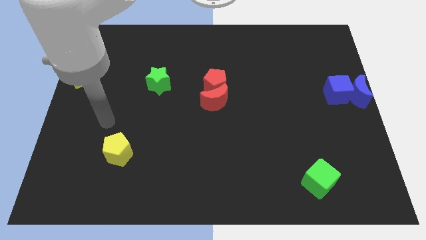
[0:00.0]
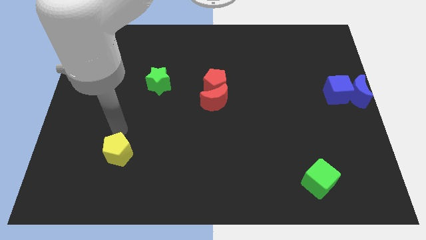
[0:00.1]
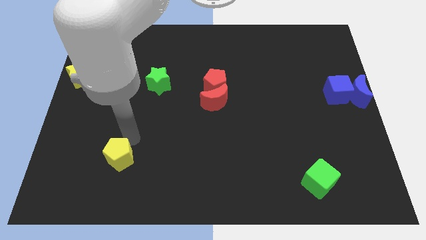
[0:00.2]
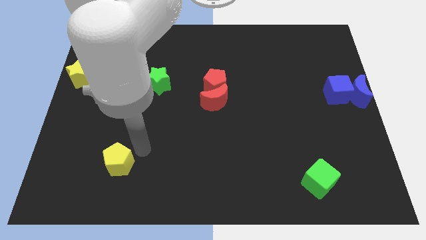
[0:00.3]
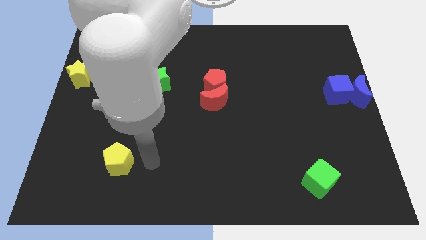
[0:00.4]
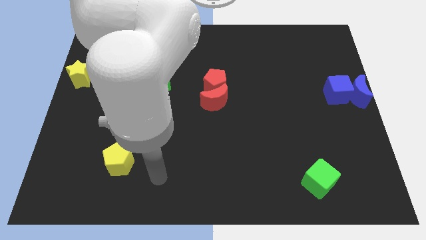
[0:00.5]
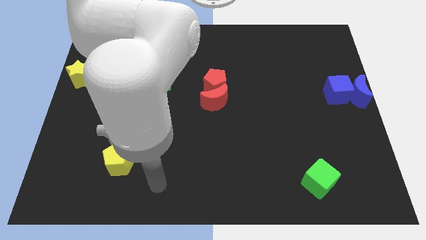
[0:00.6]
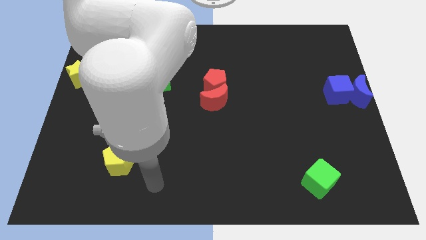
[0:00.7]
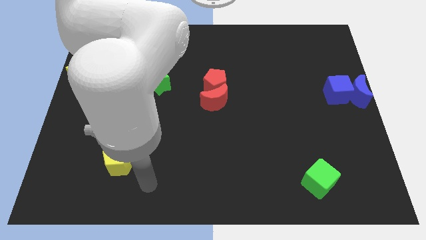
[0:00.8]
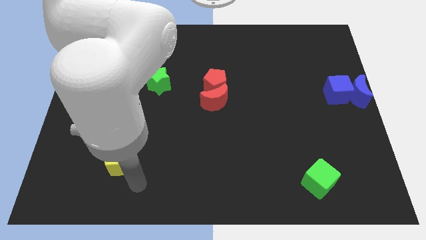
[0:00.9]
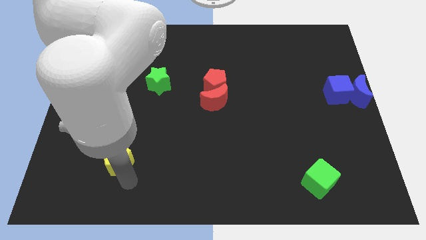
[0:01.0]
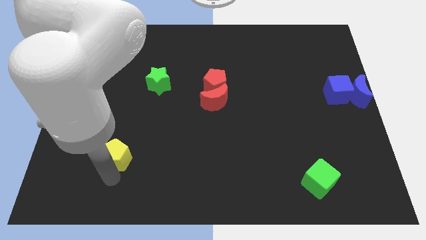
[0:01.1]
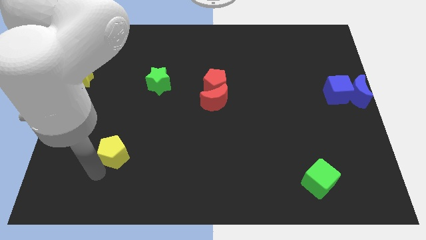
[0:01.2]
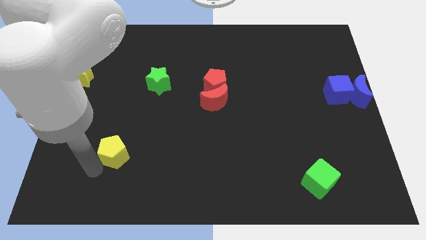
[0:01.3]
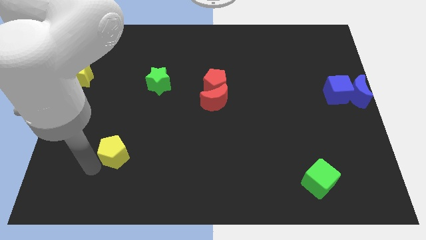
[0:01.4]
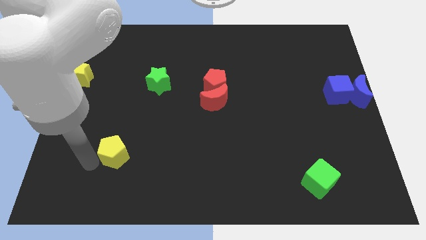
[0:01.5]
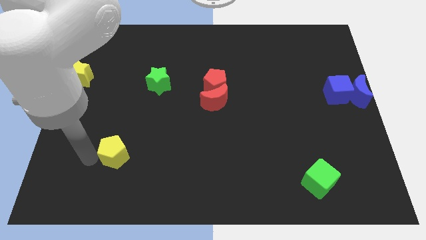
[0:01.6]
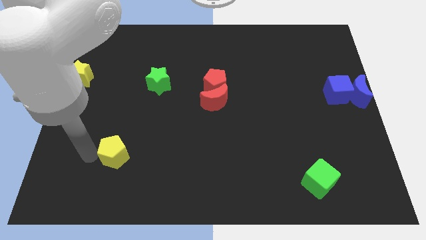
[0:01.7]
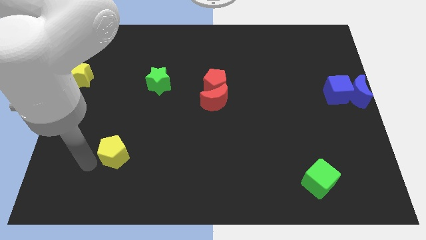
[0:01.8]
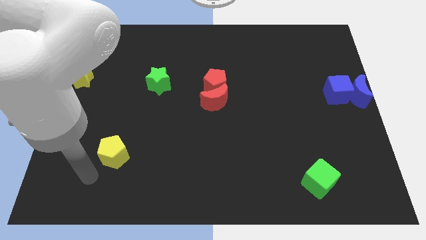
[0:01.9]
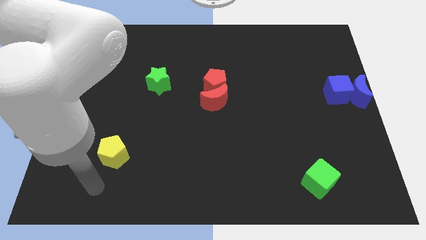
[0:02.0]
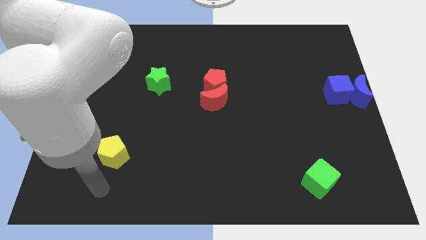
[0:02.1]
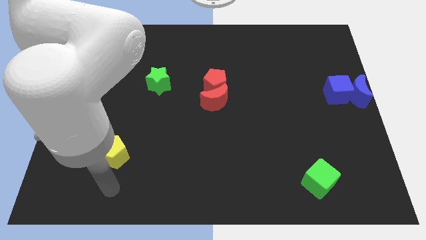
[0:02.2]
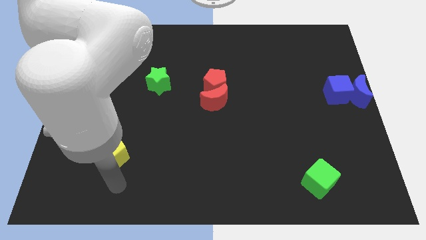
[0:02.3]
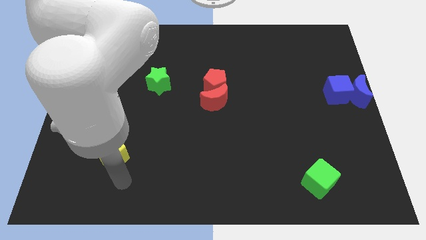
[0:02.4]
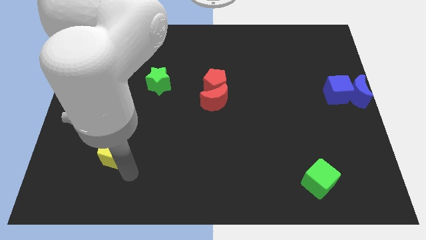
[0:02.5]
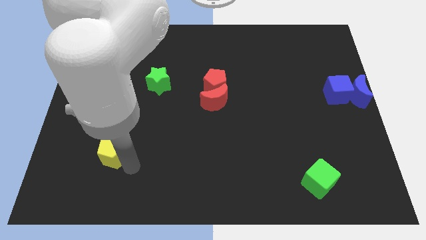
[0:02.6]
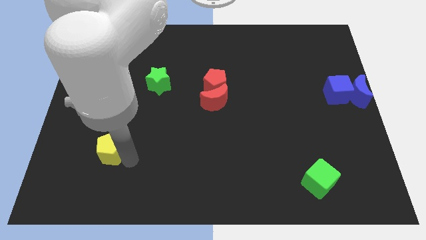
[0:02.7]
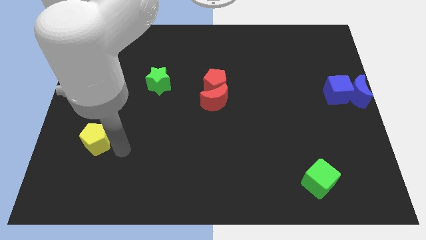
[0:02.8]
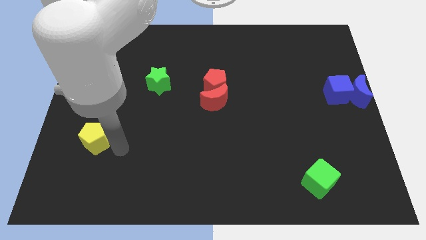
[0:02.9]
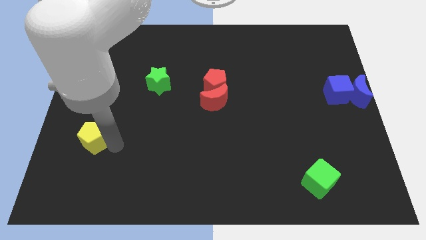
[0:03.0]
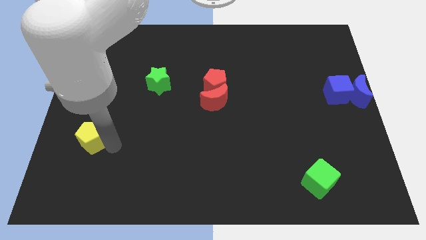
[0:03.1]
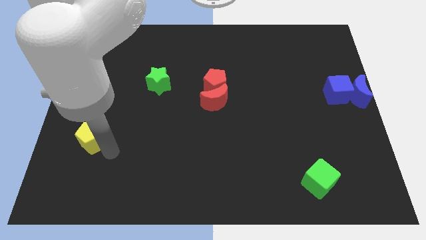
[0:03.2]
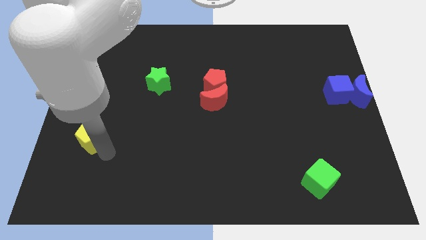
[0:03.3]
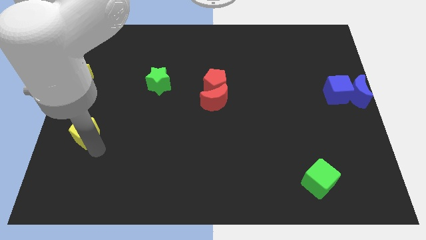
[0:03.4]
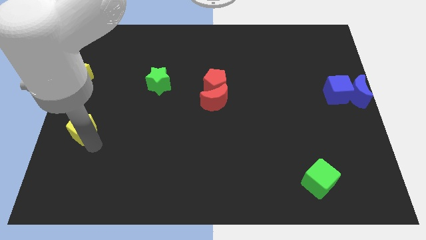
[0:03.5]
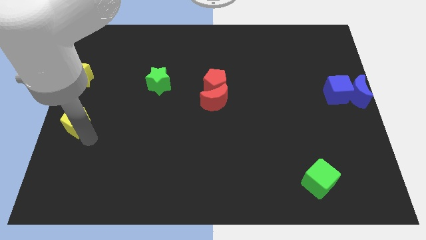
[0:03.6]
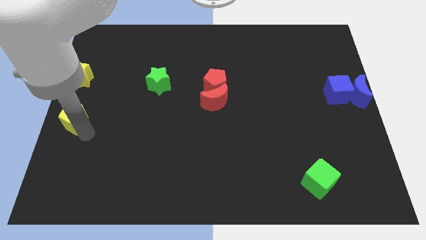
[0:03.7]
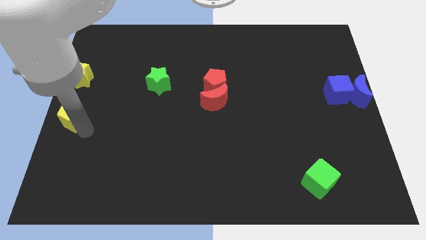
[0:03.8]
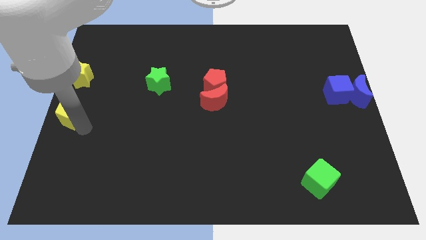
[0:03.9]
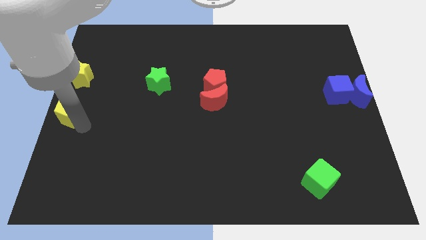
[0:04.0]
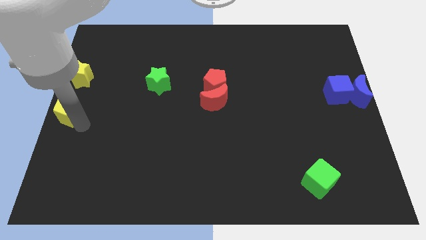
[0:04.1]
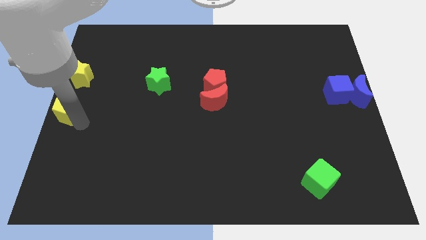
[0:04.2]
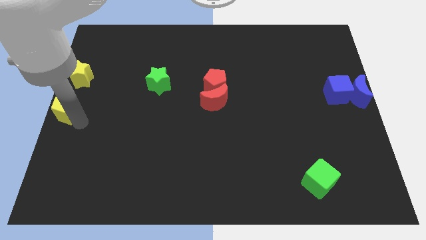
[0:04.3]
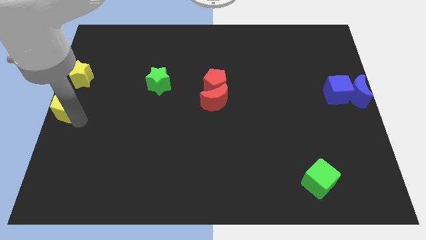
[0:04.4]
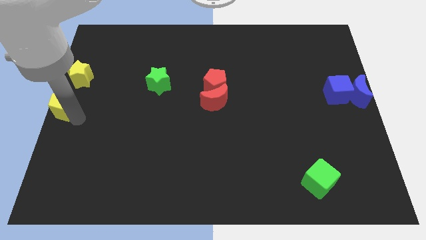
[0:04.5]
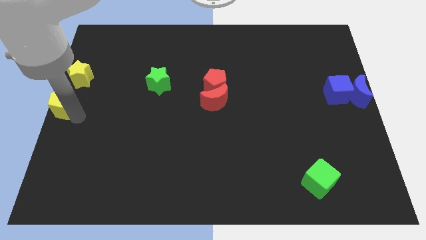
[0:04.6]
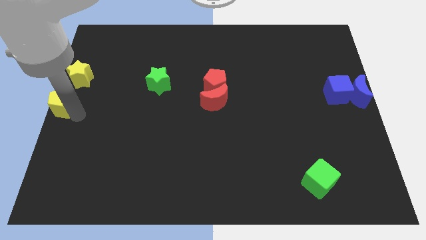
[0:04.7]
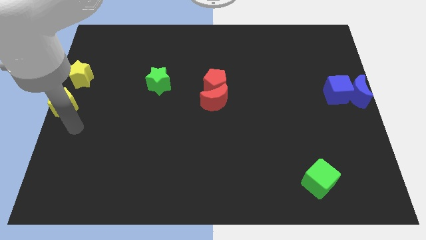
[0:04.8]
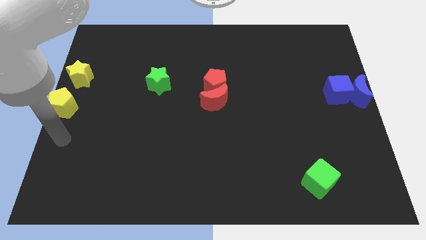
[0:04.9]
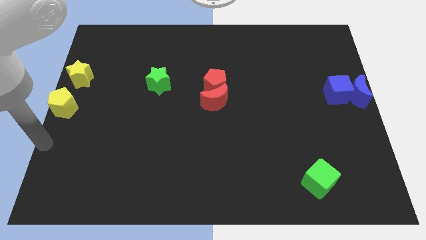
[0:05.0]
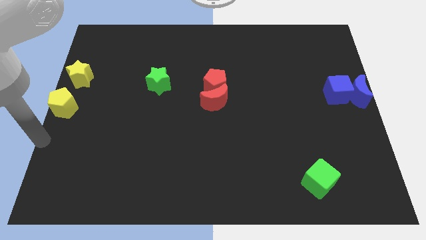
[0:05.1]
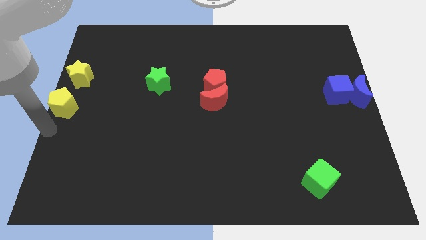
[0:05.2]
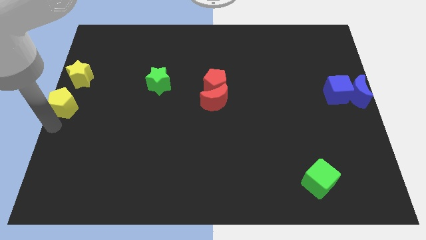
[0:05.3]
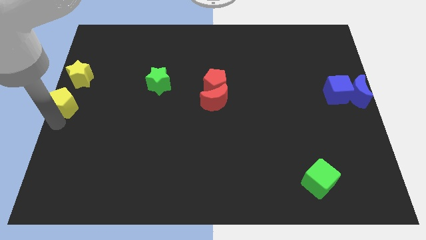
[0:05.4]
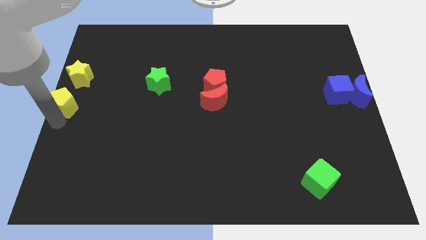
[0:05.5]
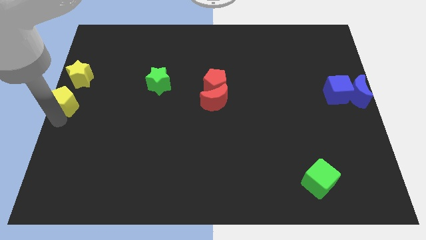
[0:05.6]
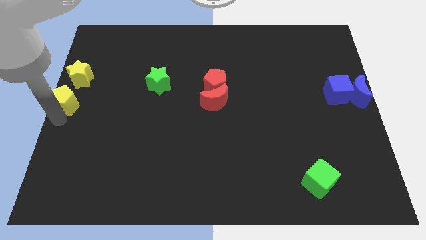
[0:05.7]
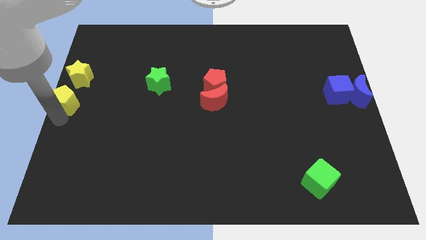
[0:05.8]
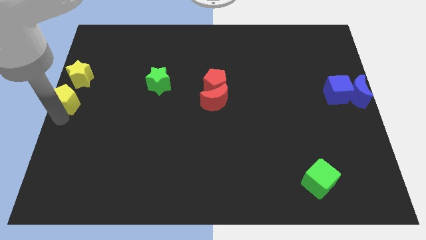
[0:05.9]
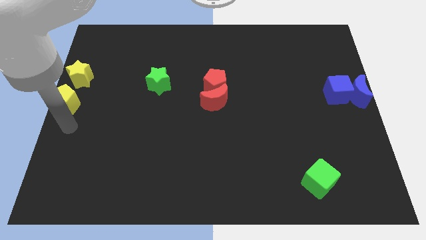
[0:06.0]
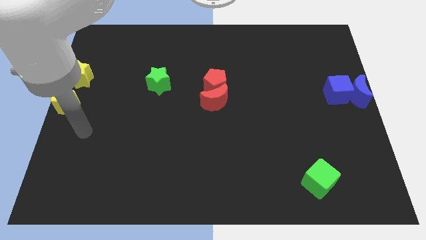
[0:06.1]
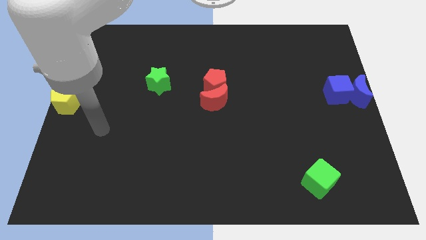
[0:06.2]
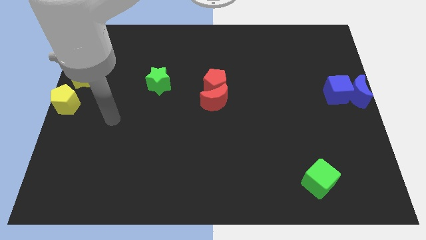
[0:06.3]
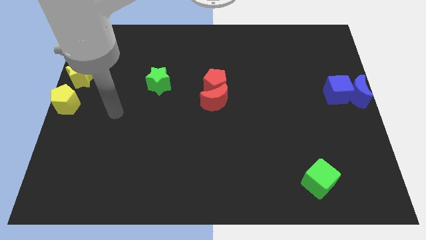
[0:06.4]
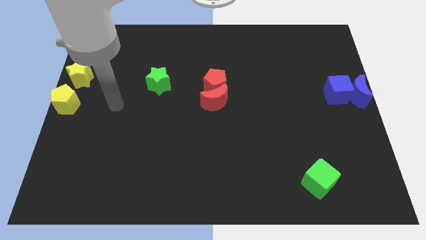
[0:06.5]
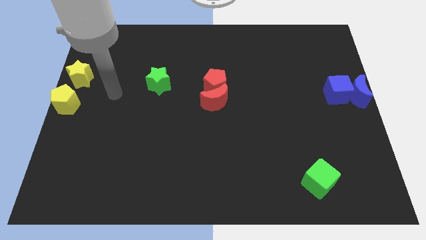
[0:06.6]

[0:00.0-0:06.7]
place the yellow pentagon below the yellow star

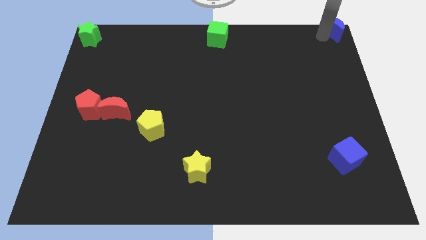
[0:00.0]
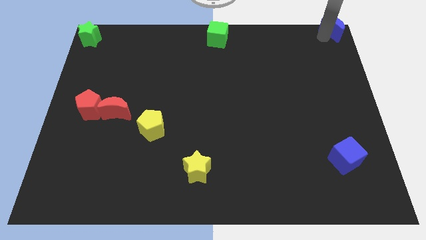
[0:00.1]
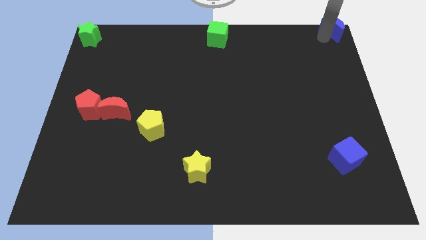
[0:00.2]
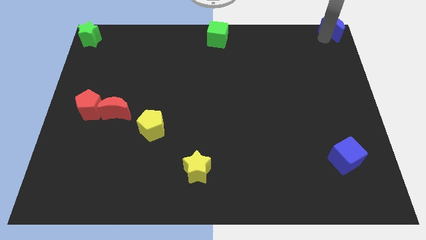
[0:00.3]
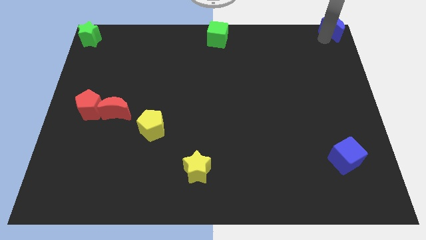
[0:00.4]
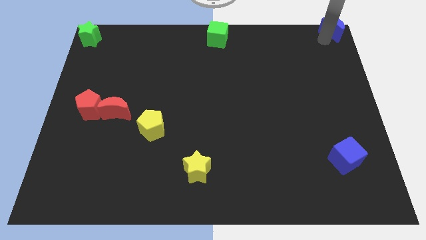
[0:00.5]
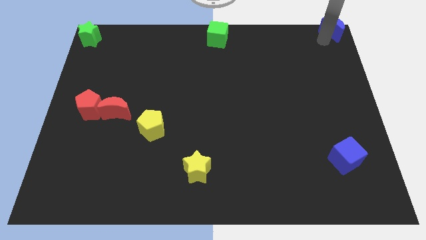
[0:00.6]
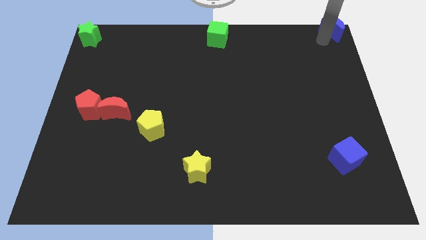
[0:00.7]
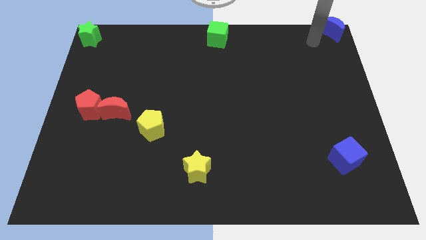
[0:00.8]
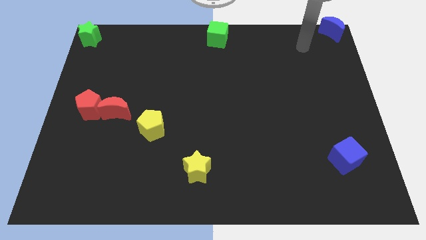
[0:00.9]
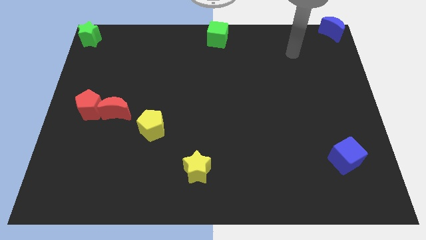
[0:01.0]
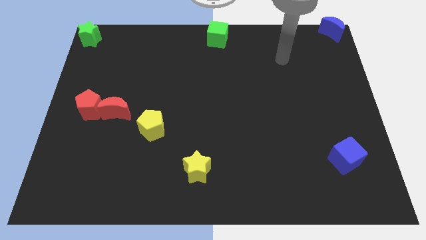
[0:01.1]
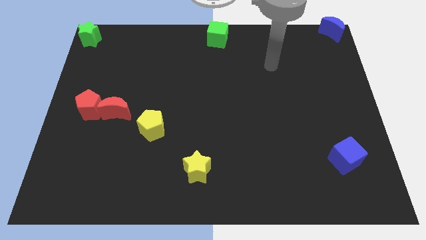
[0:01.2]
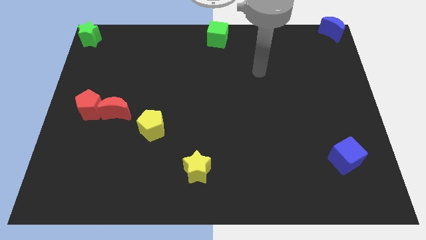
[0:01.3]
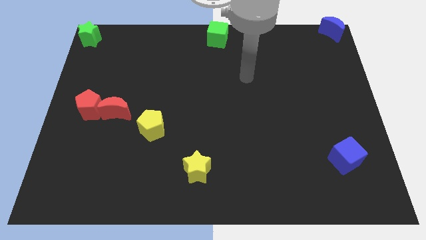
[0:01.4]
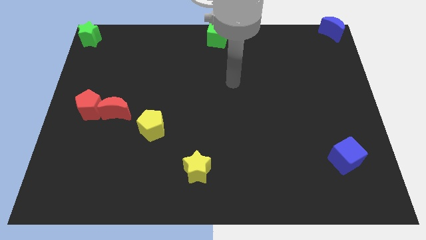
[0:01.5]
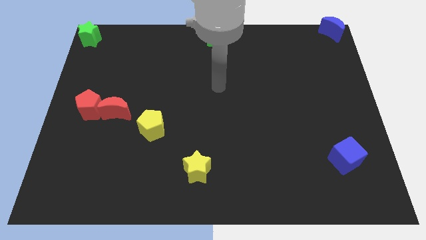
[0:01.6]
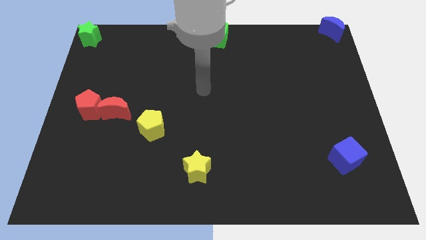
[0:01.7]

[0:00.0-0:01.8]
move towards the center of the board

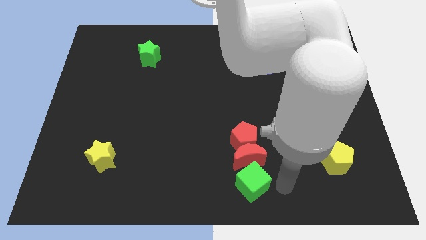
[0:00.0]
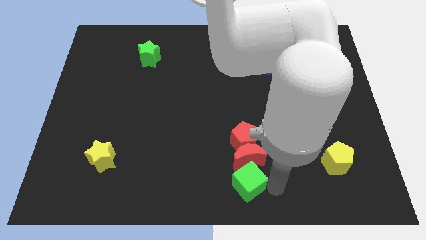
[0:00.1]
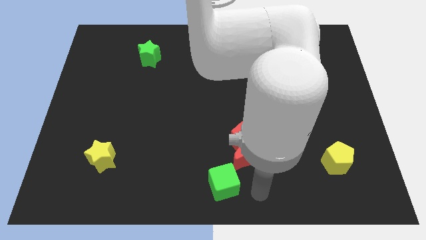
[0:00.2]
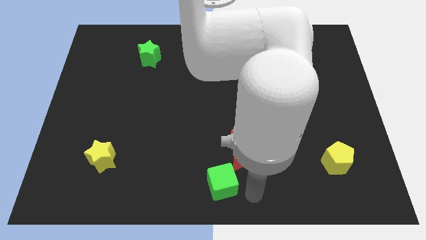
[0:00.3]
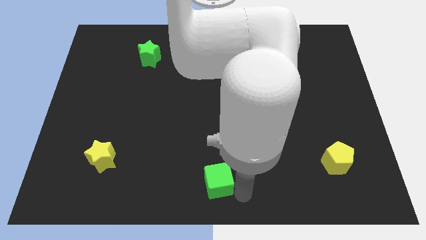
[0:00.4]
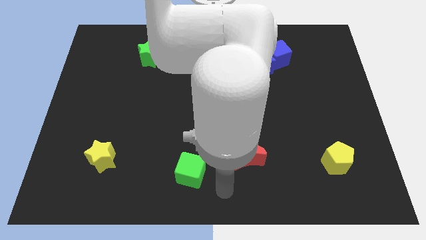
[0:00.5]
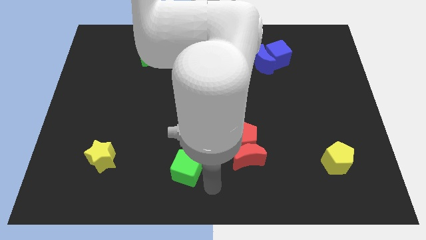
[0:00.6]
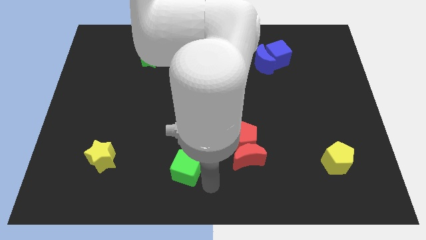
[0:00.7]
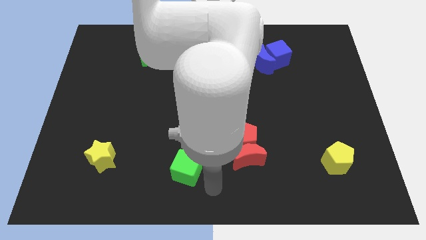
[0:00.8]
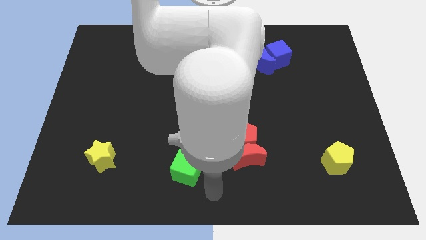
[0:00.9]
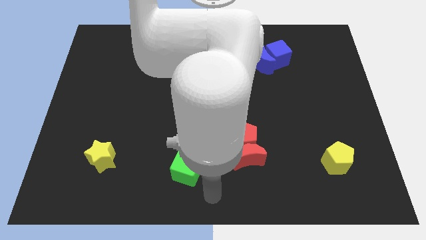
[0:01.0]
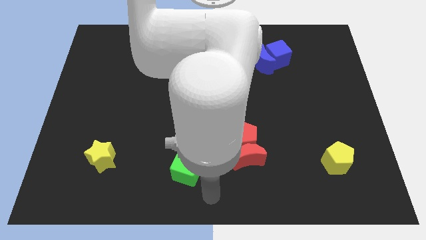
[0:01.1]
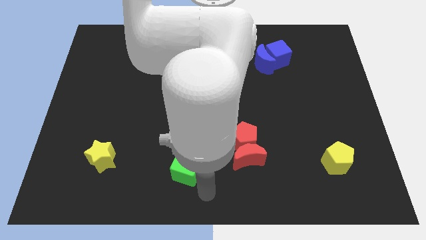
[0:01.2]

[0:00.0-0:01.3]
push the green cube away from the red crescent
